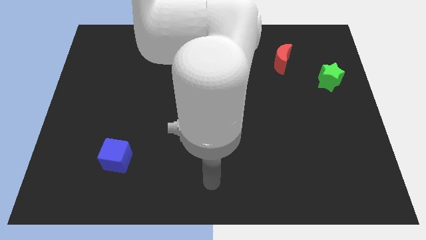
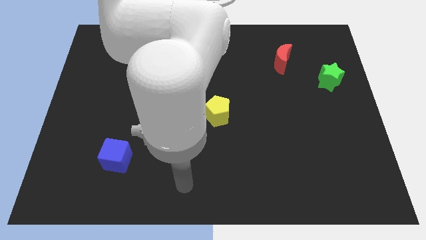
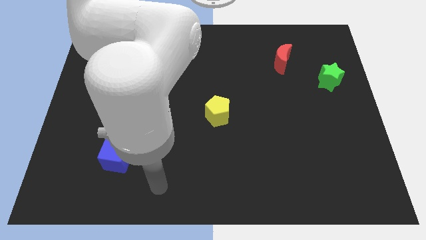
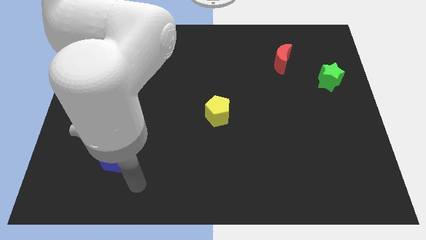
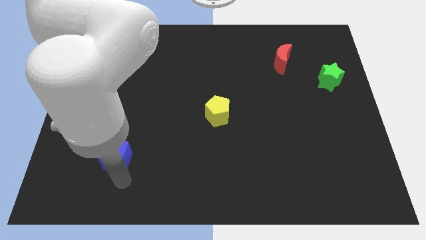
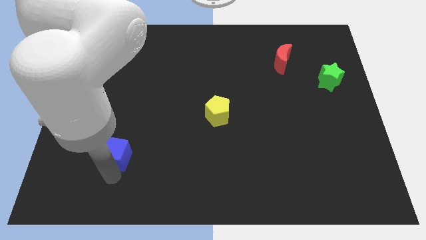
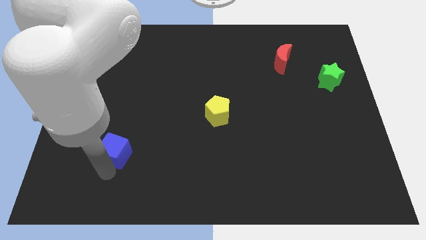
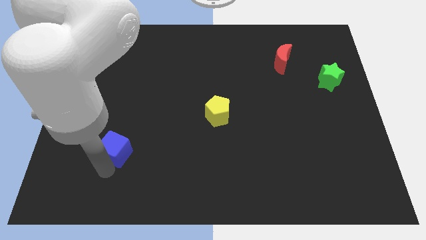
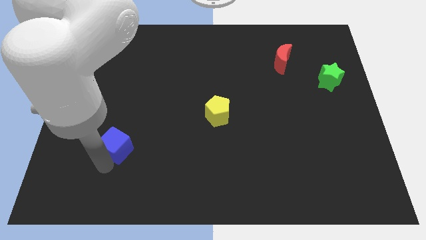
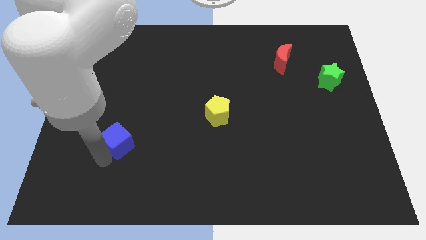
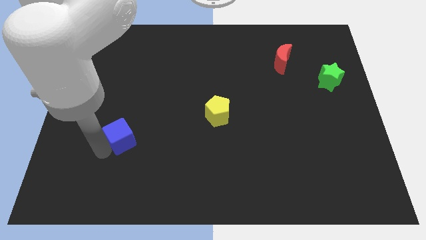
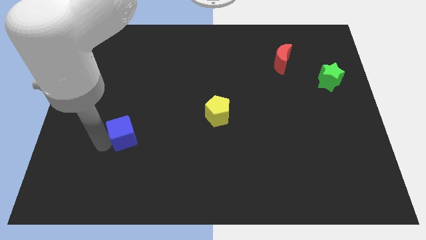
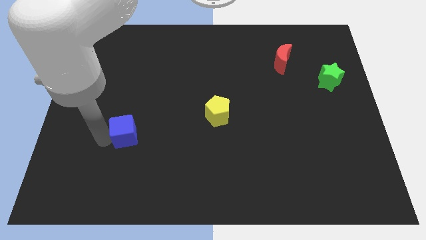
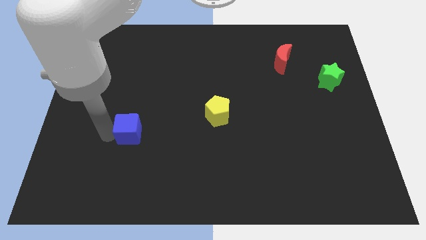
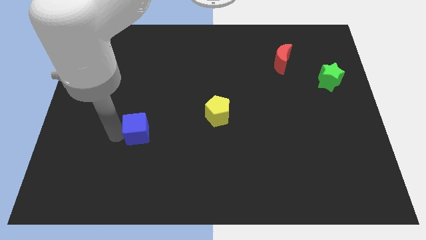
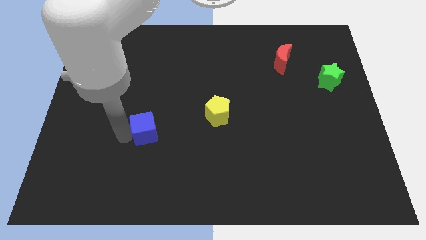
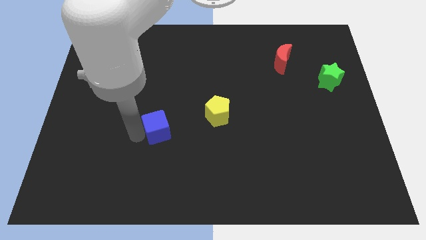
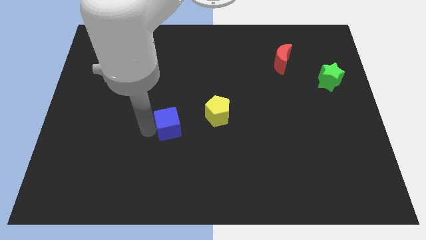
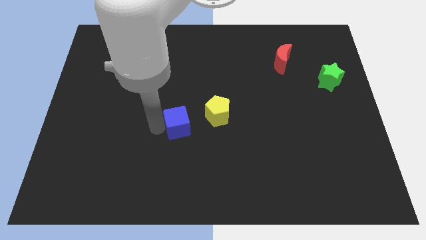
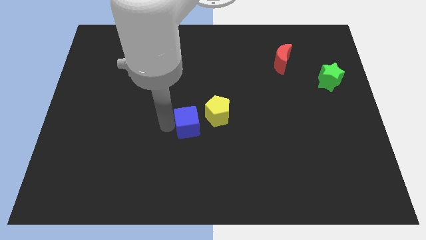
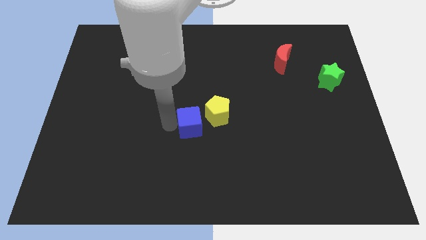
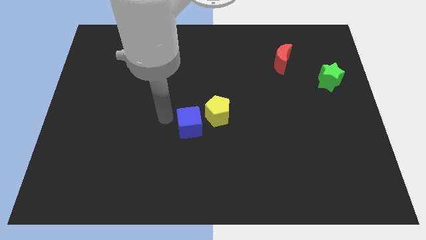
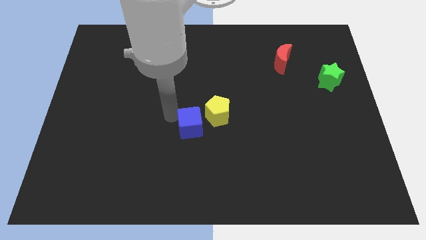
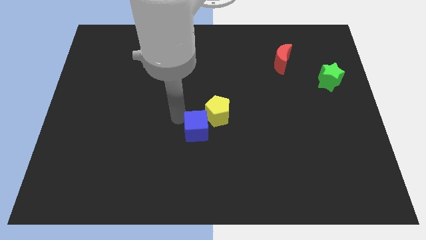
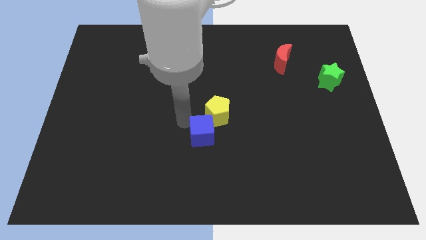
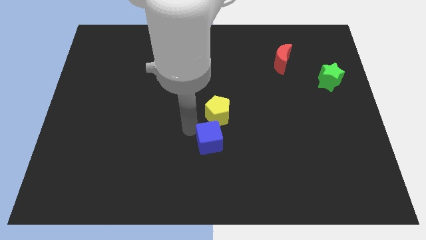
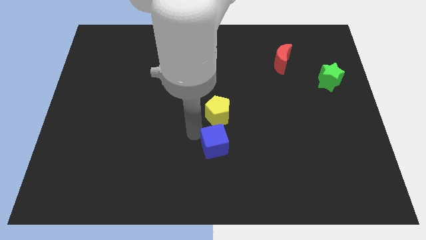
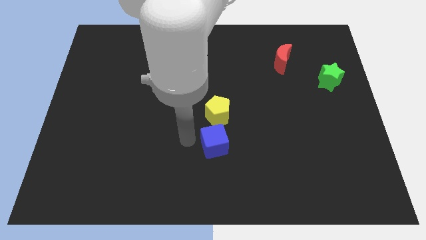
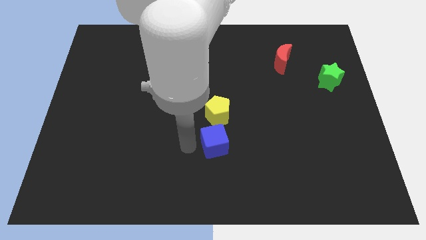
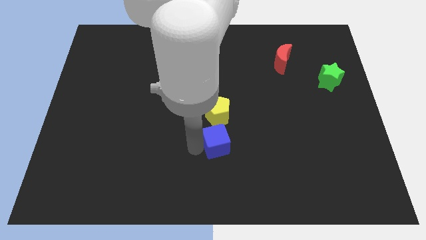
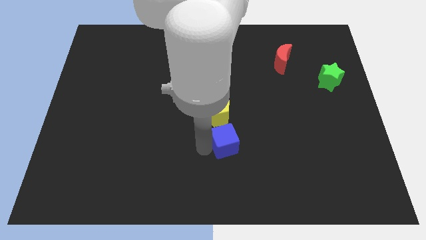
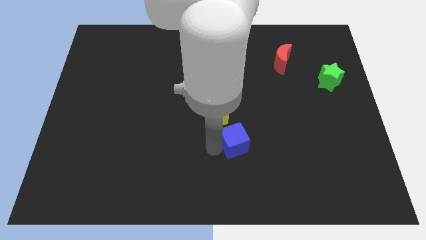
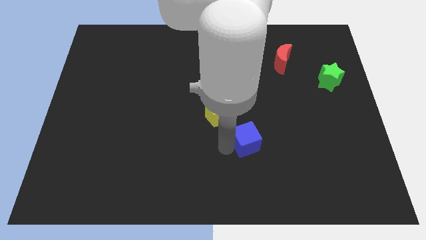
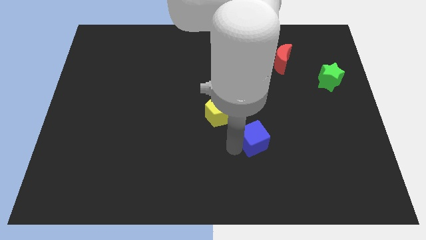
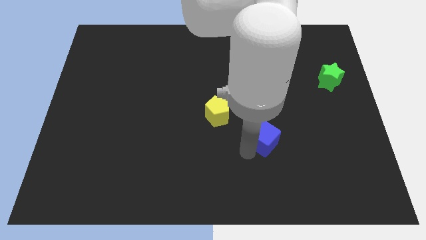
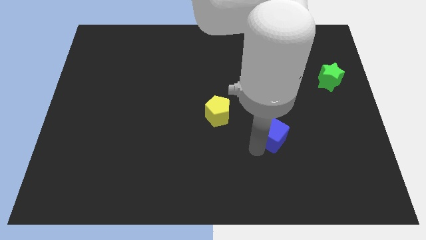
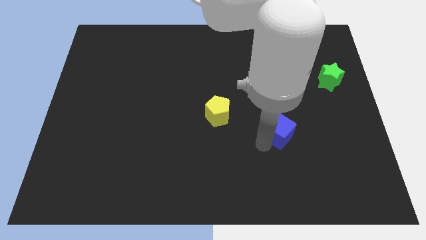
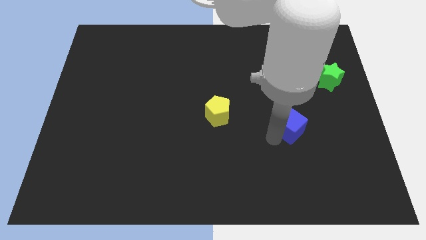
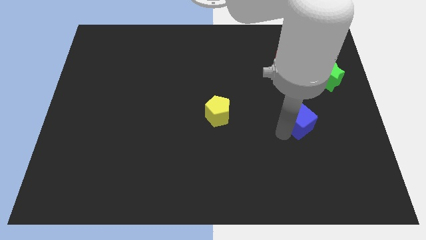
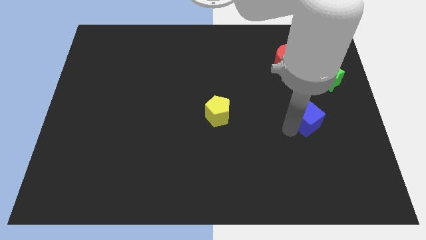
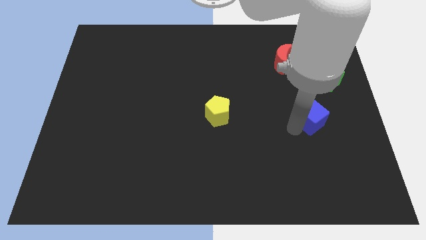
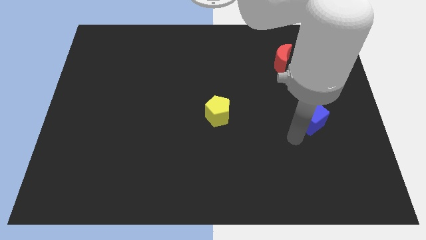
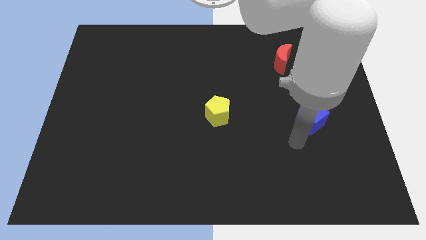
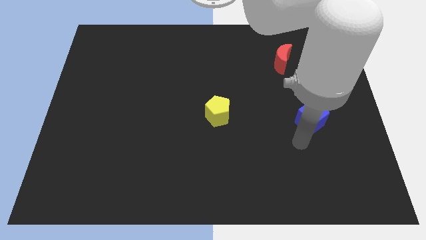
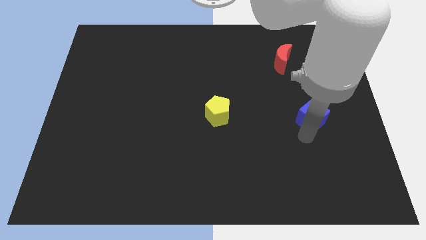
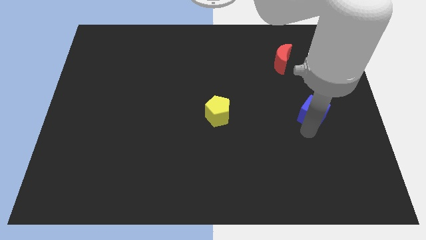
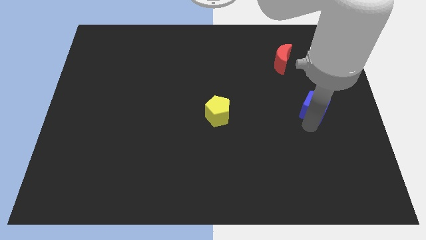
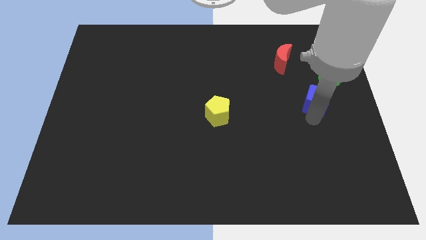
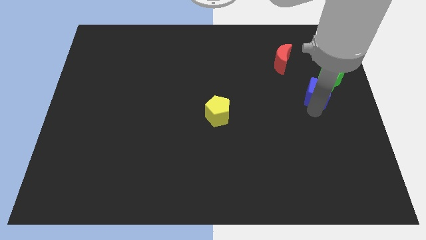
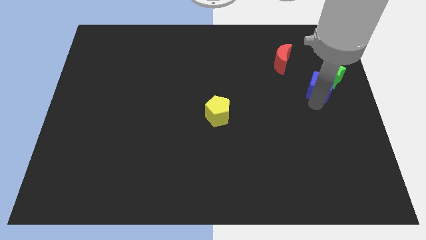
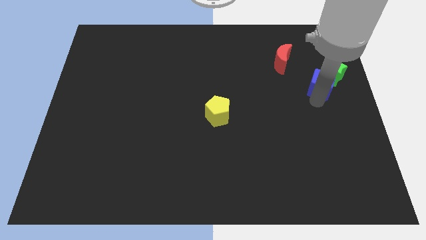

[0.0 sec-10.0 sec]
put the cube towards the green star

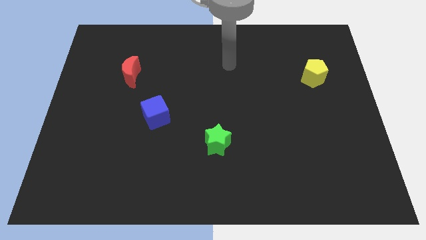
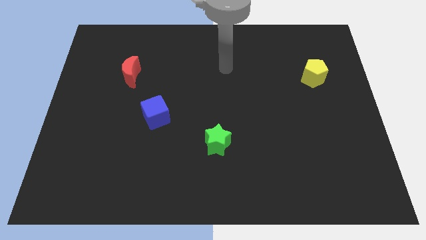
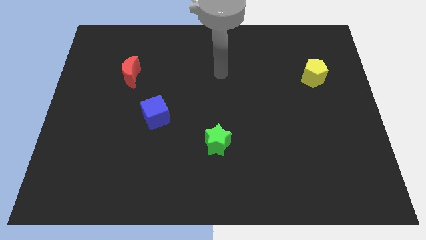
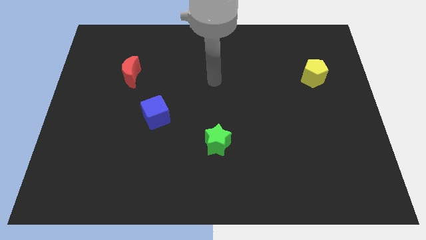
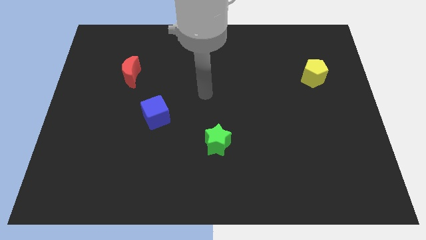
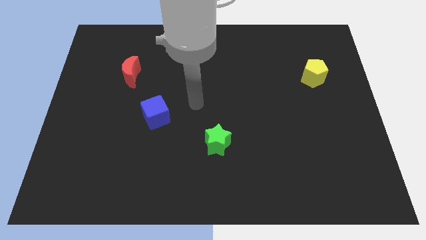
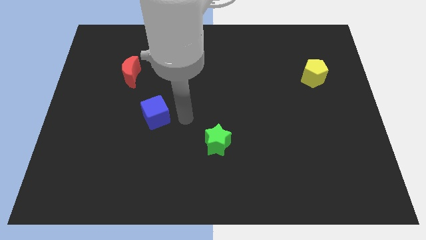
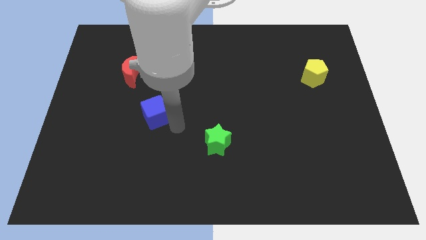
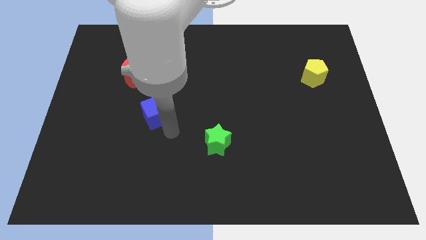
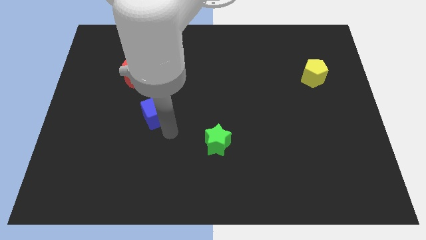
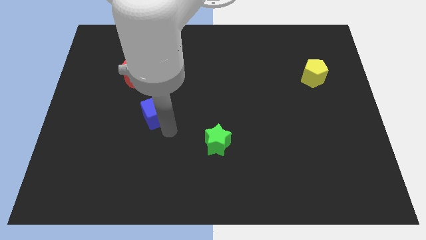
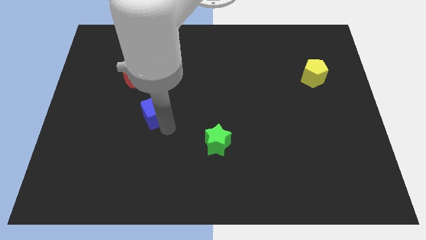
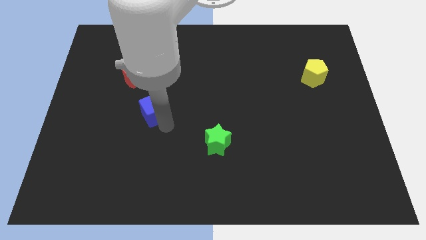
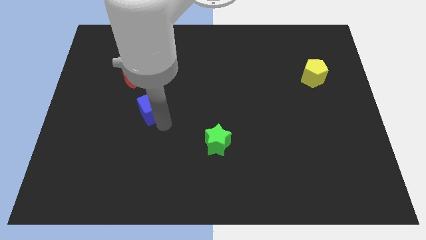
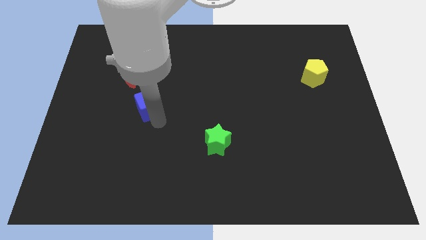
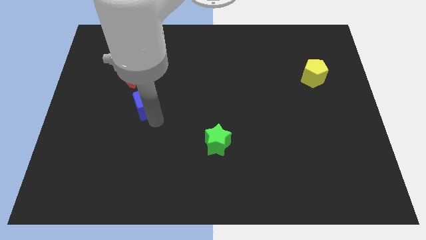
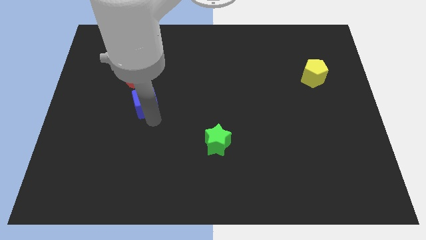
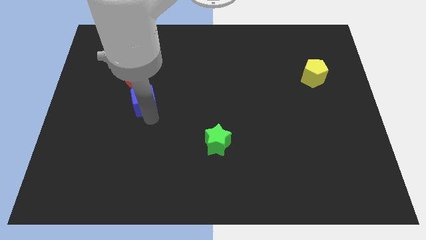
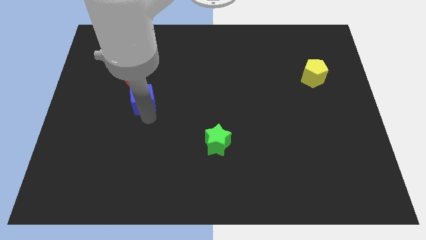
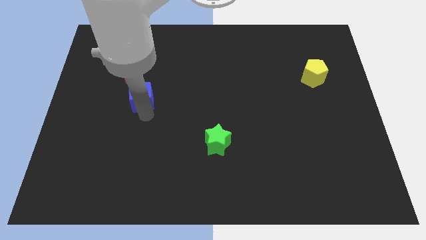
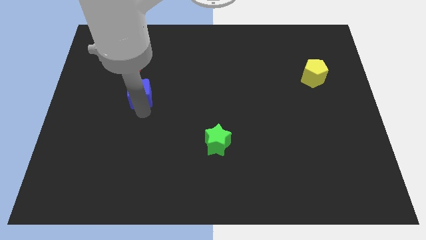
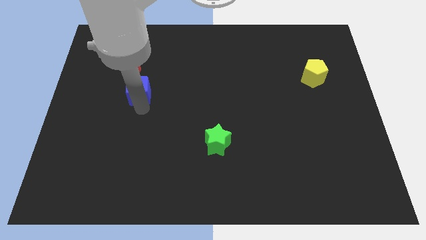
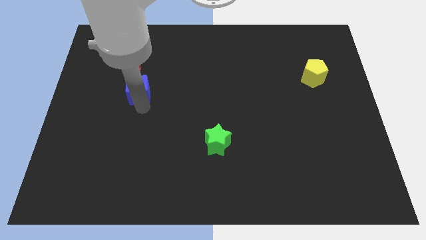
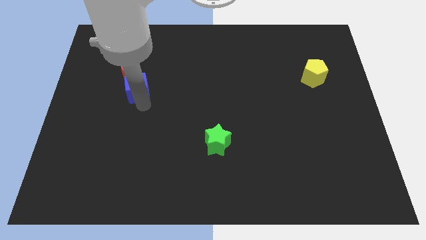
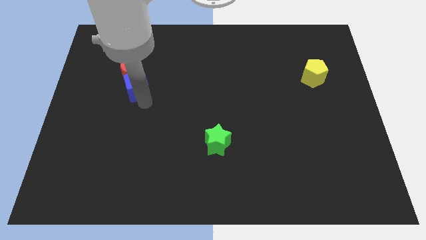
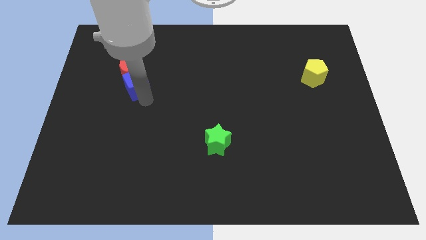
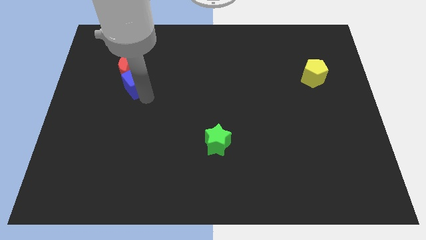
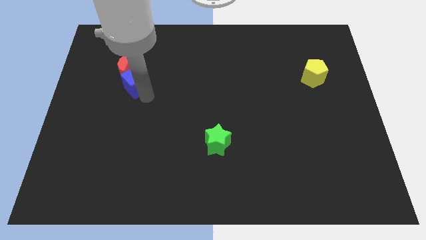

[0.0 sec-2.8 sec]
move the cube next to the red moon

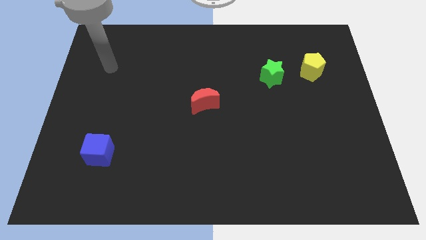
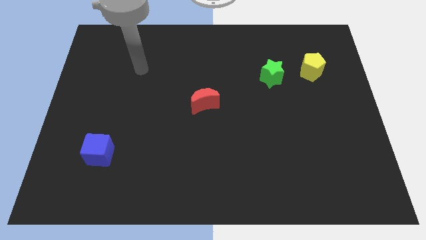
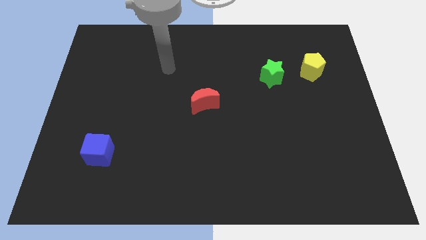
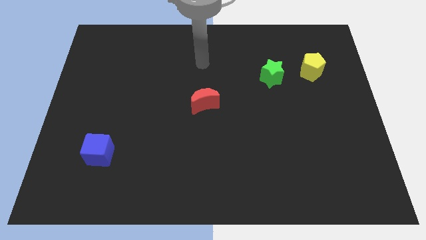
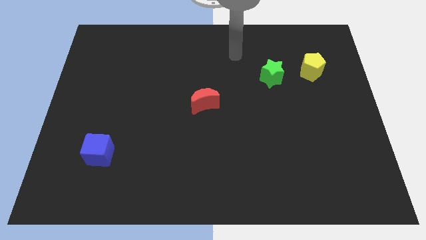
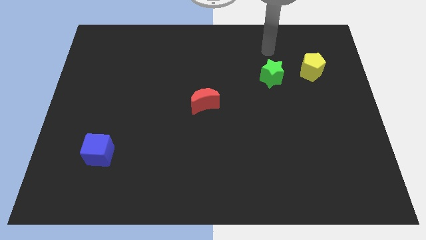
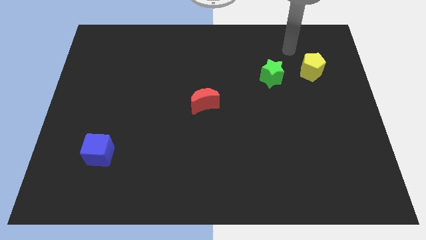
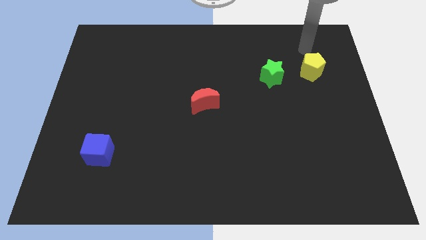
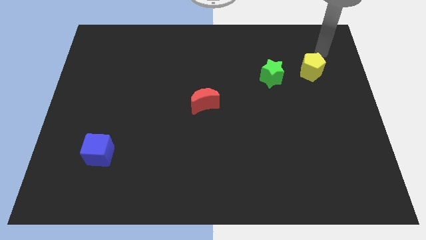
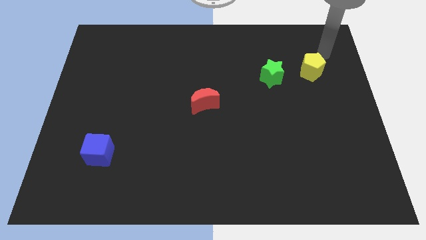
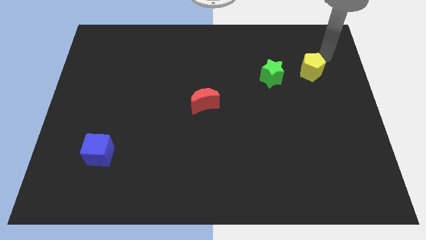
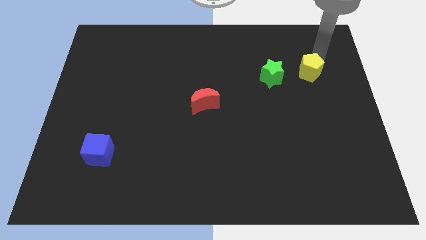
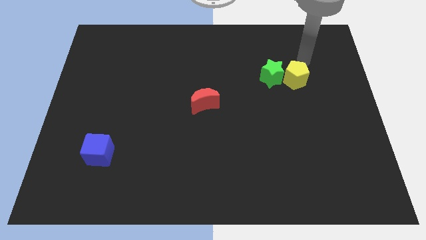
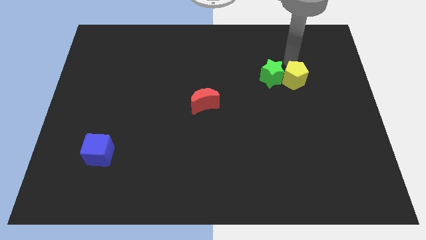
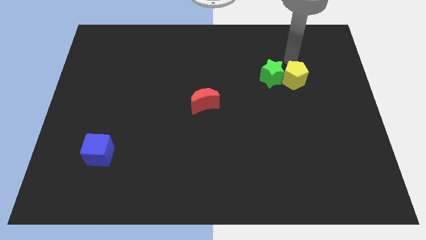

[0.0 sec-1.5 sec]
push the yellow pentagon next to the star
